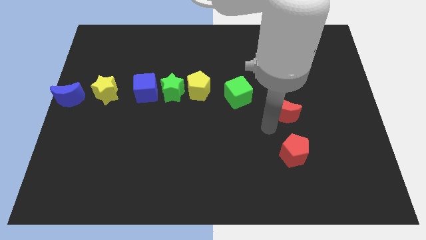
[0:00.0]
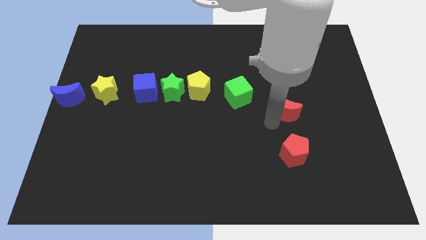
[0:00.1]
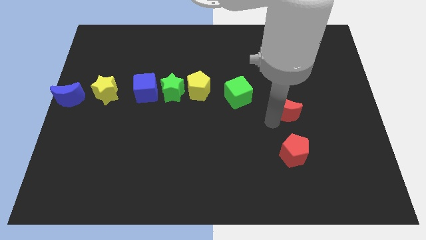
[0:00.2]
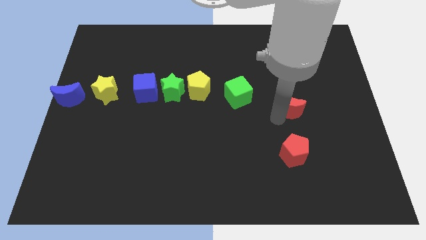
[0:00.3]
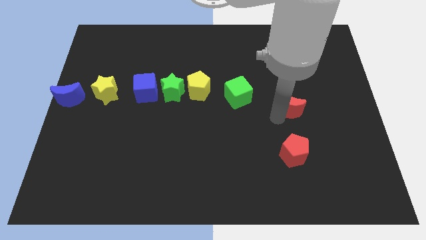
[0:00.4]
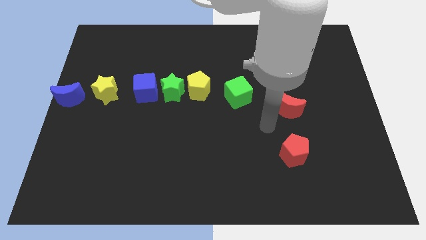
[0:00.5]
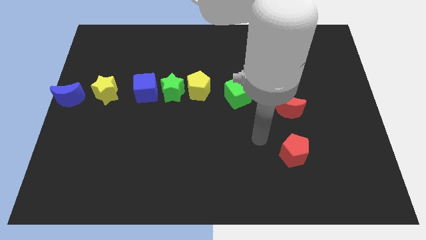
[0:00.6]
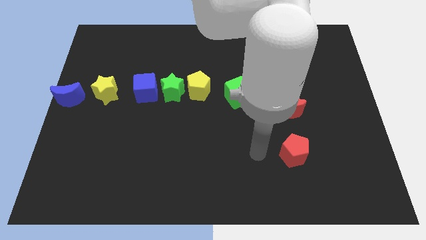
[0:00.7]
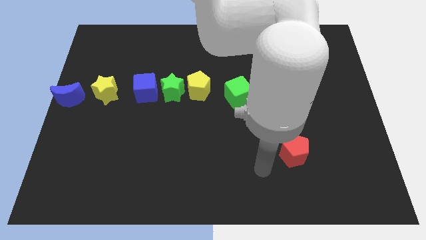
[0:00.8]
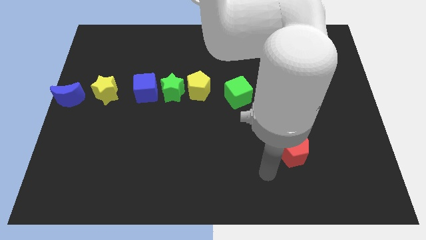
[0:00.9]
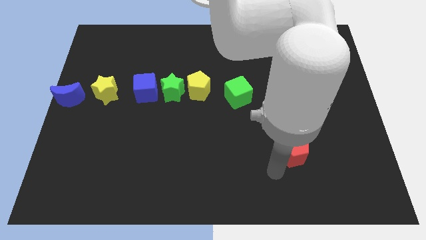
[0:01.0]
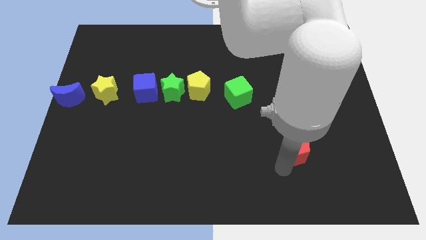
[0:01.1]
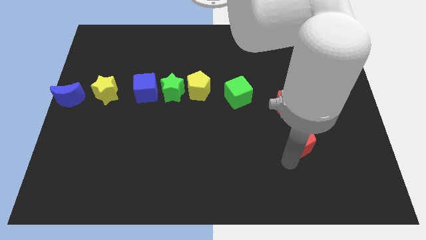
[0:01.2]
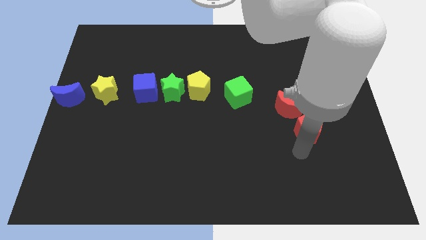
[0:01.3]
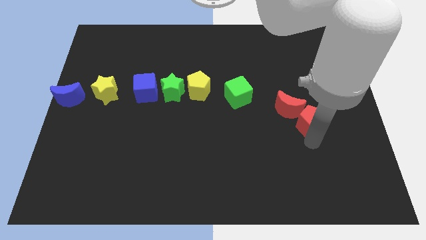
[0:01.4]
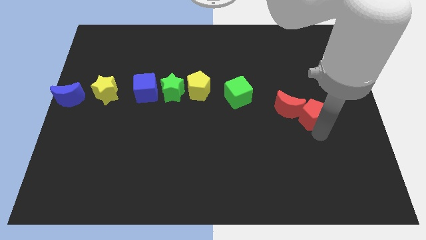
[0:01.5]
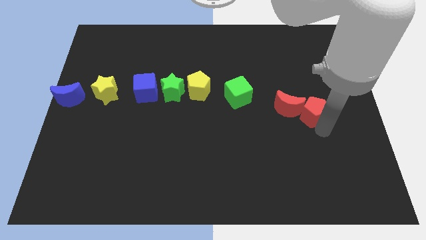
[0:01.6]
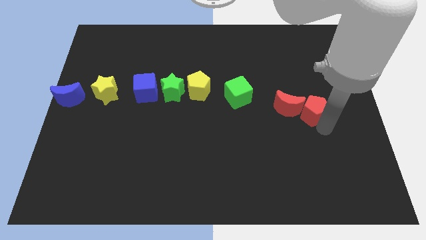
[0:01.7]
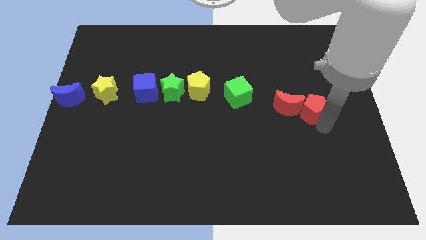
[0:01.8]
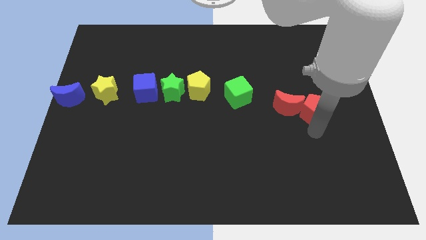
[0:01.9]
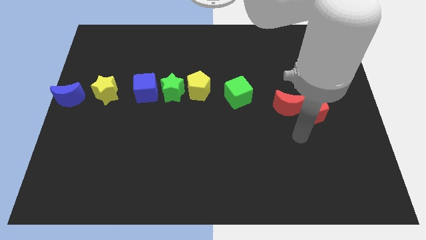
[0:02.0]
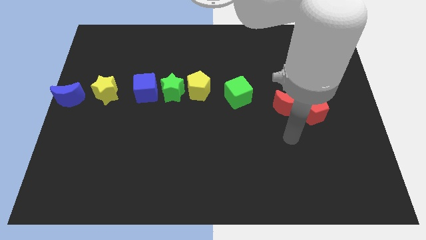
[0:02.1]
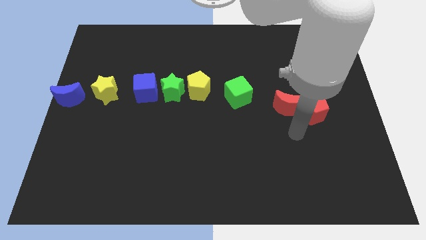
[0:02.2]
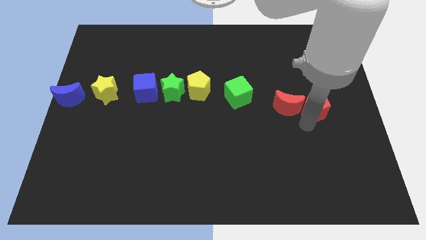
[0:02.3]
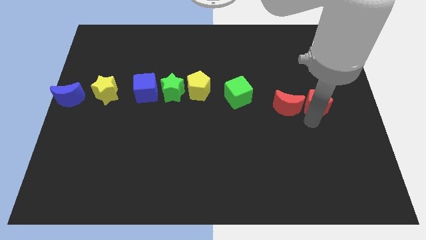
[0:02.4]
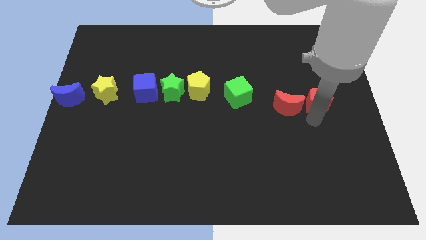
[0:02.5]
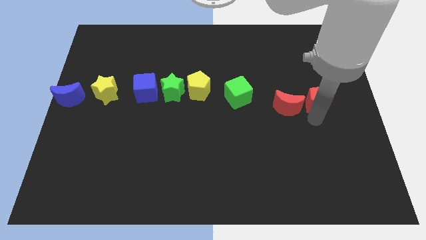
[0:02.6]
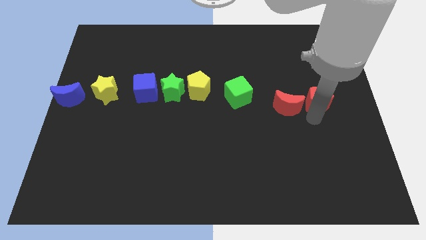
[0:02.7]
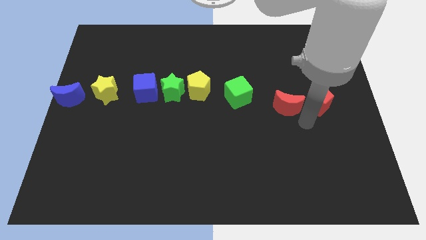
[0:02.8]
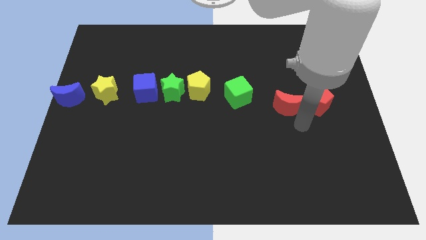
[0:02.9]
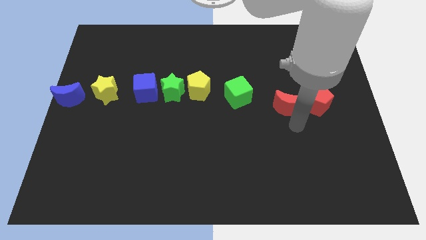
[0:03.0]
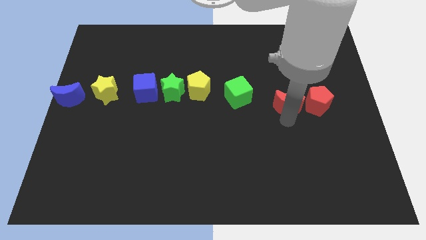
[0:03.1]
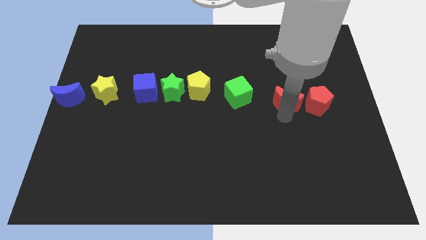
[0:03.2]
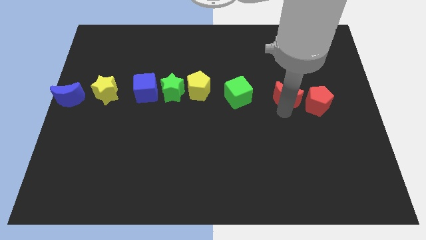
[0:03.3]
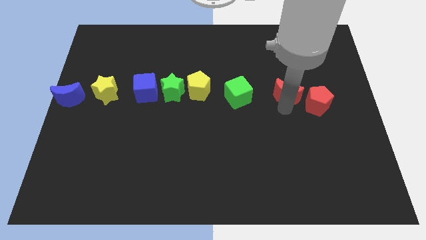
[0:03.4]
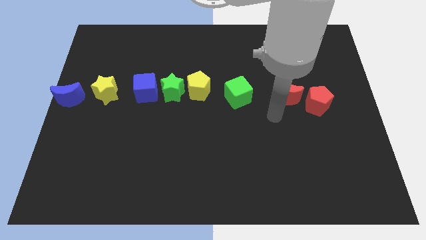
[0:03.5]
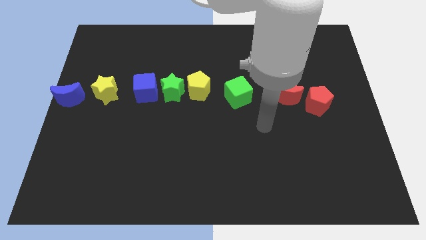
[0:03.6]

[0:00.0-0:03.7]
push the red moon and the red pentagon towards the center right

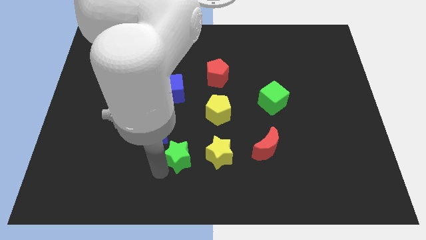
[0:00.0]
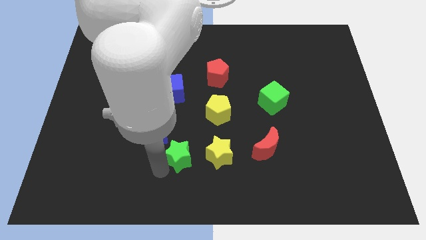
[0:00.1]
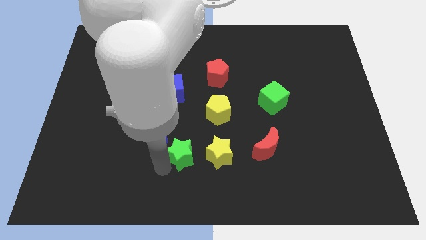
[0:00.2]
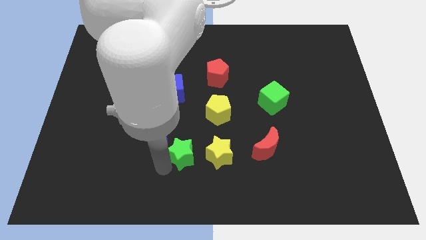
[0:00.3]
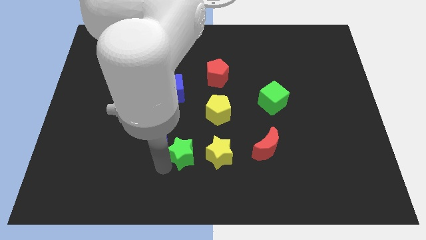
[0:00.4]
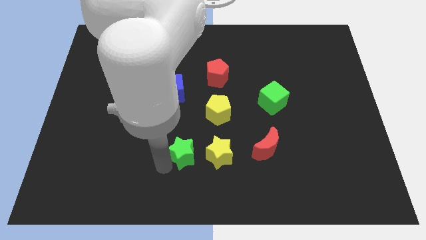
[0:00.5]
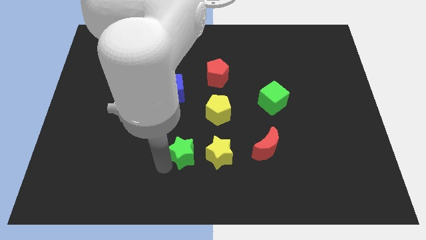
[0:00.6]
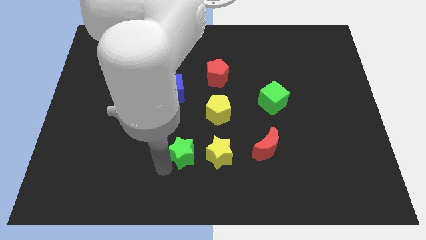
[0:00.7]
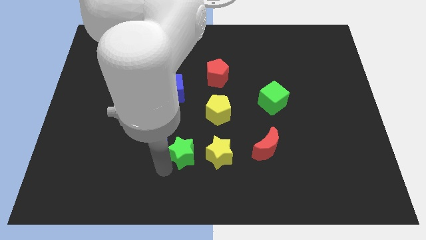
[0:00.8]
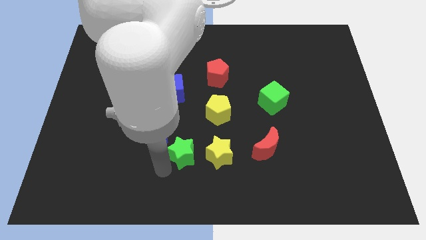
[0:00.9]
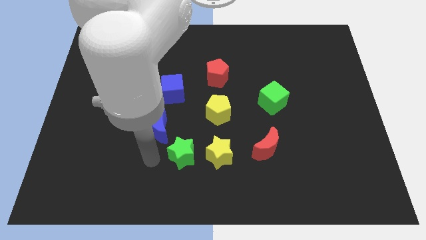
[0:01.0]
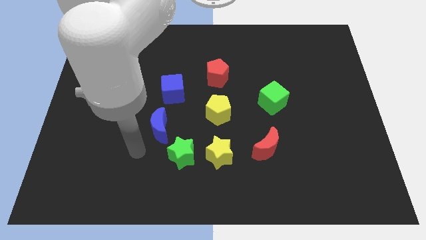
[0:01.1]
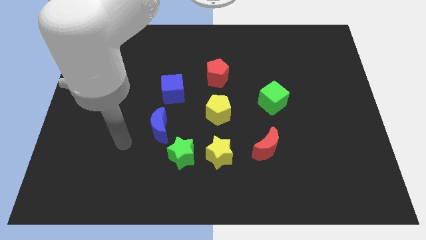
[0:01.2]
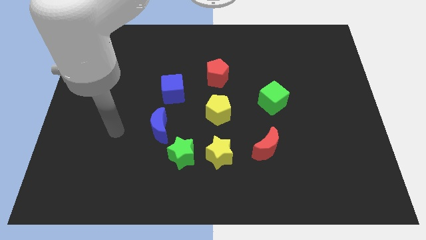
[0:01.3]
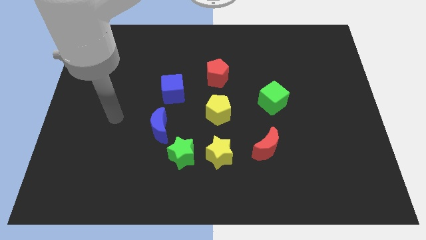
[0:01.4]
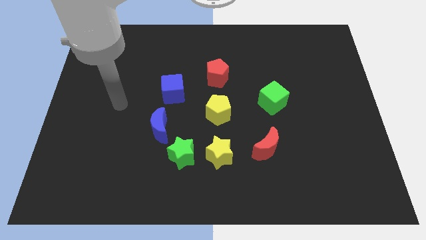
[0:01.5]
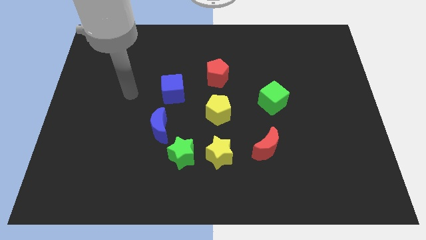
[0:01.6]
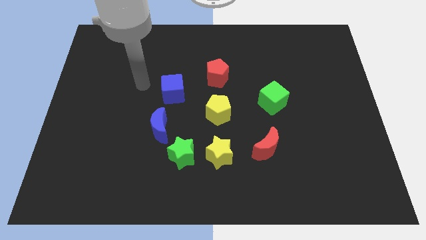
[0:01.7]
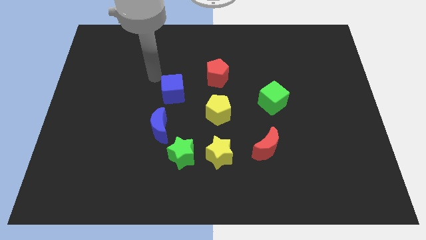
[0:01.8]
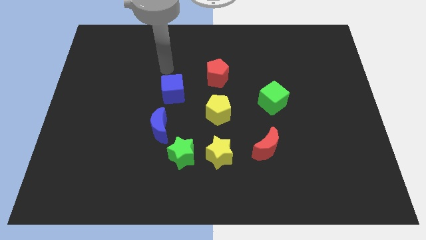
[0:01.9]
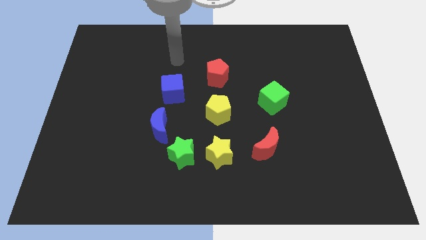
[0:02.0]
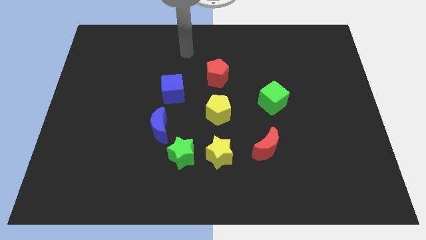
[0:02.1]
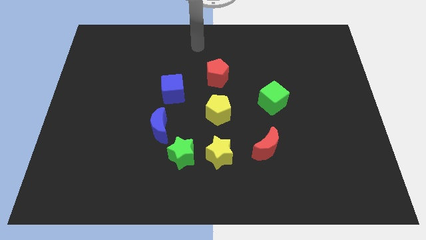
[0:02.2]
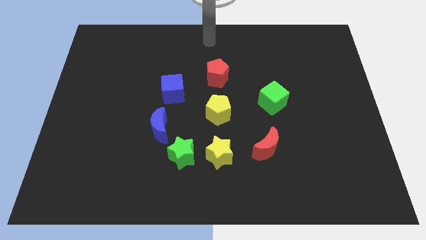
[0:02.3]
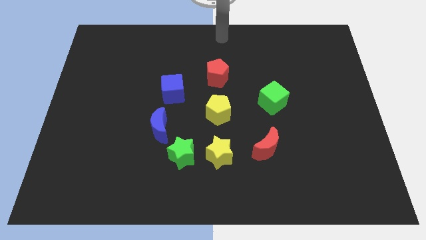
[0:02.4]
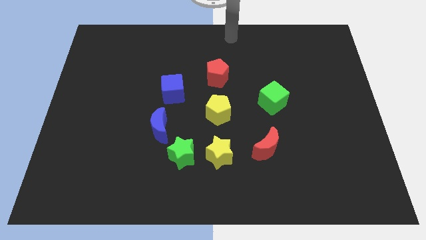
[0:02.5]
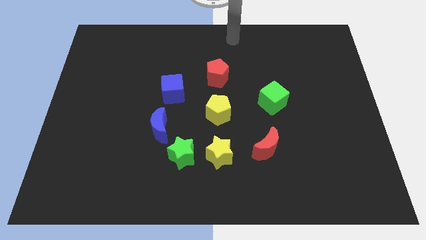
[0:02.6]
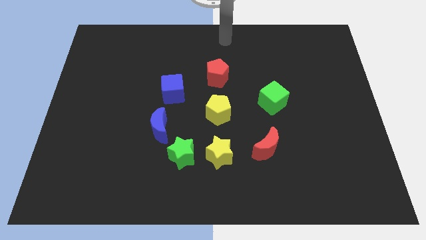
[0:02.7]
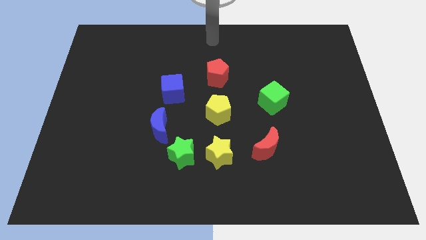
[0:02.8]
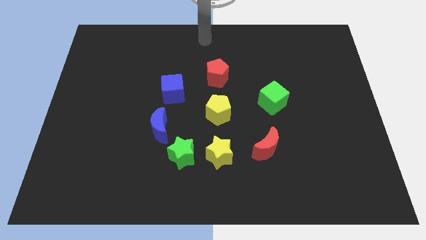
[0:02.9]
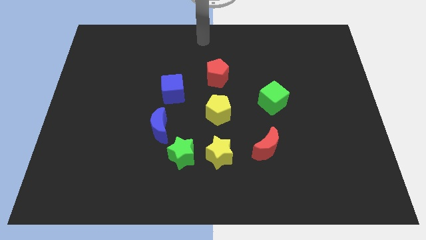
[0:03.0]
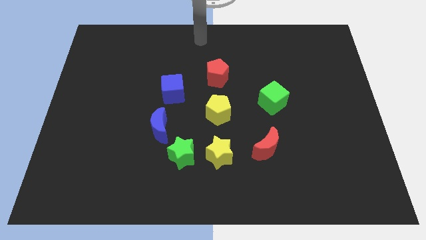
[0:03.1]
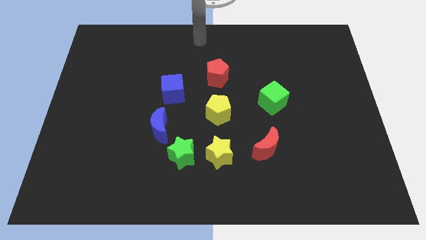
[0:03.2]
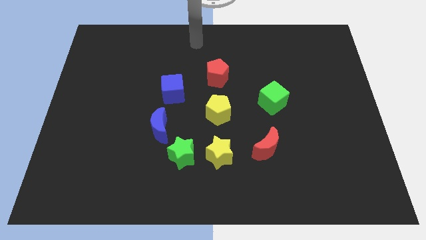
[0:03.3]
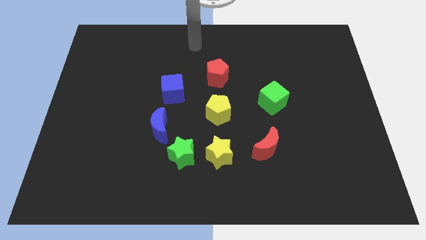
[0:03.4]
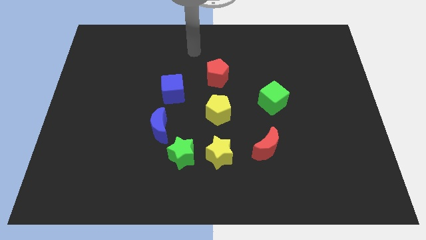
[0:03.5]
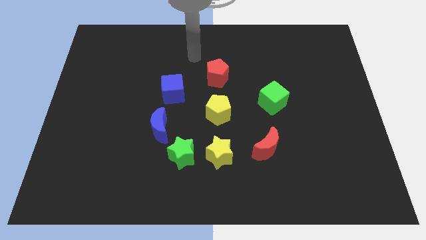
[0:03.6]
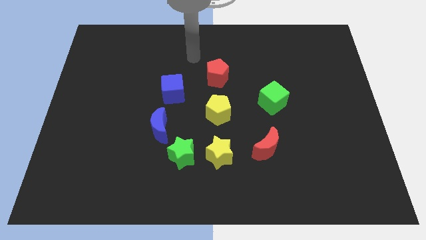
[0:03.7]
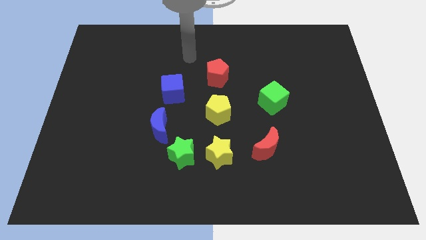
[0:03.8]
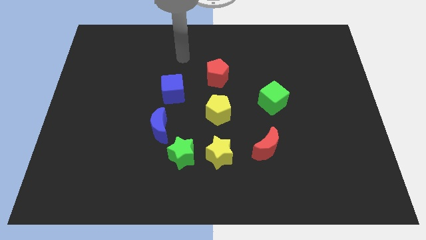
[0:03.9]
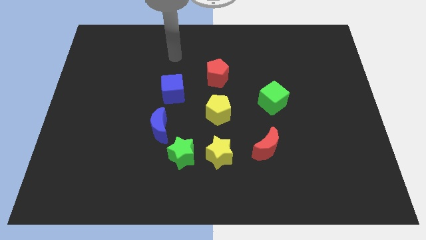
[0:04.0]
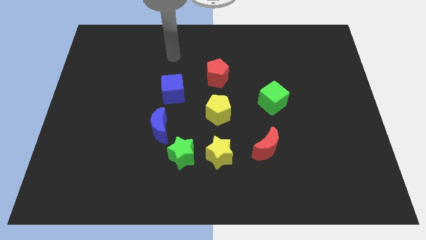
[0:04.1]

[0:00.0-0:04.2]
move away from green star

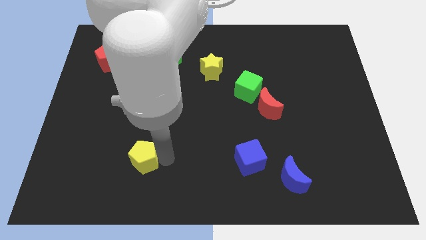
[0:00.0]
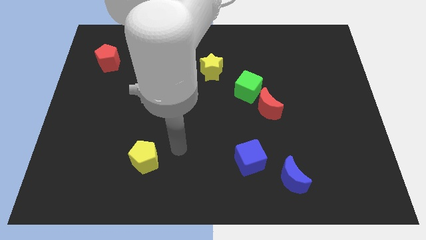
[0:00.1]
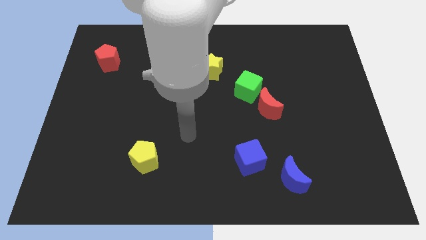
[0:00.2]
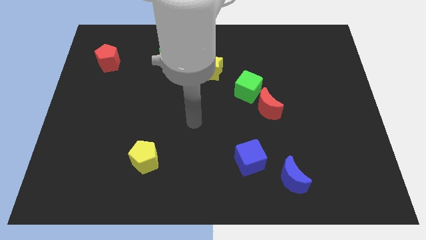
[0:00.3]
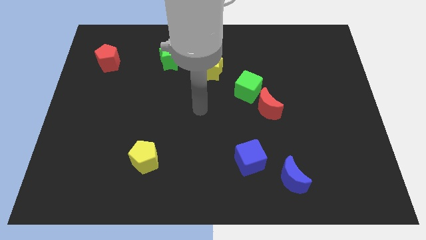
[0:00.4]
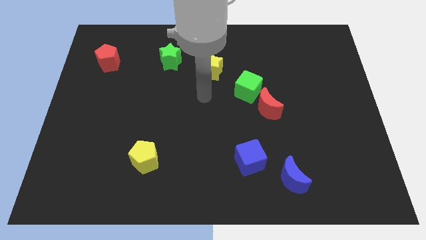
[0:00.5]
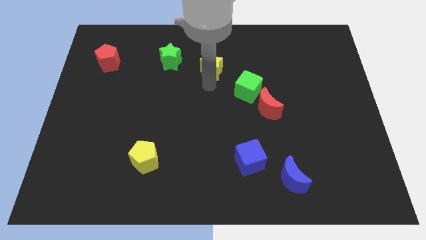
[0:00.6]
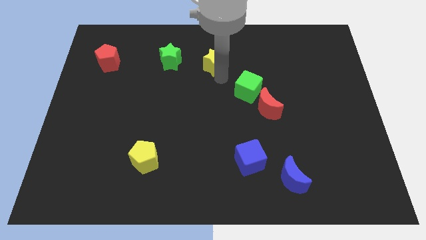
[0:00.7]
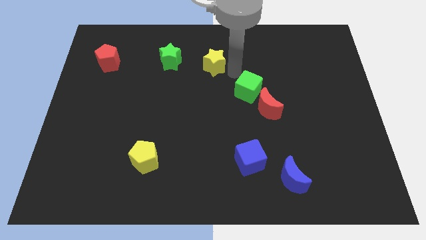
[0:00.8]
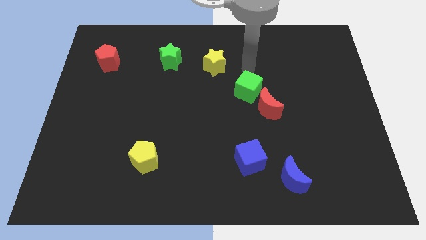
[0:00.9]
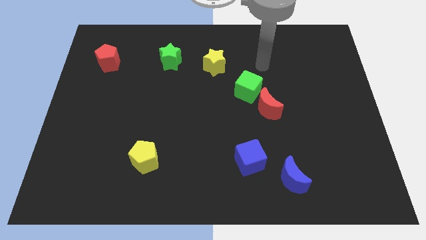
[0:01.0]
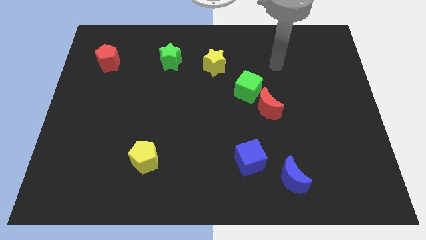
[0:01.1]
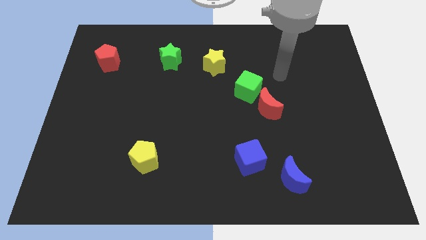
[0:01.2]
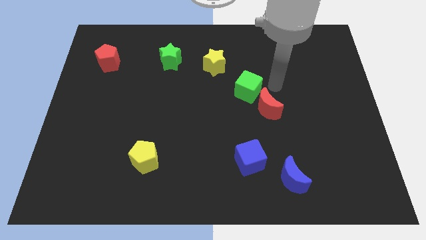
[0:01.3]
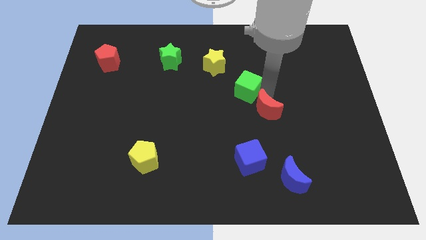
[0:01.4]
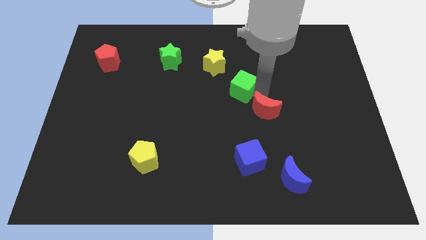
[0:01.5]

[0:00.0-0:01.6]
slightly push the yellow star to the top side
